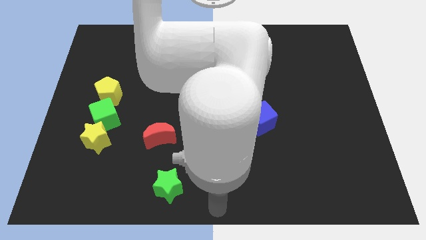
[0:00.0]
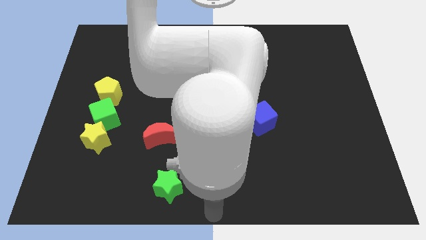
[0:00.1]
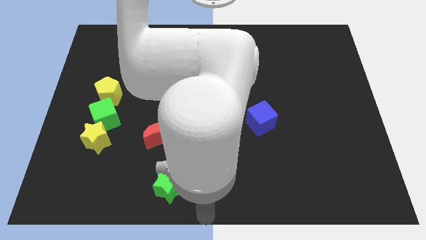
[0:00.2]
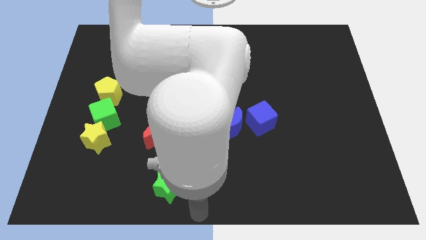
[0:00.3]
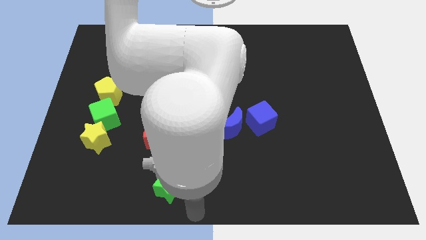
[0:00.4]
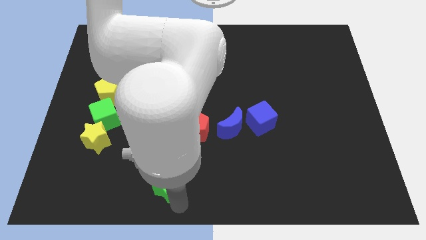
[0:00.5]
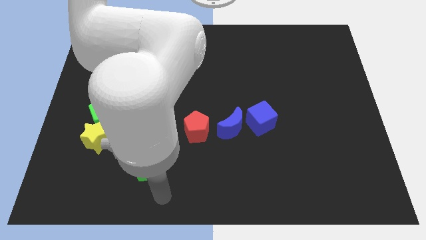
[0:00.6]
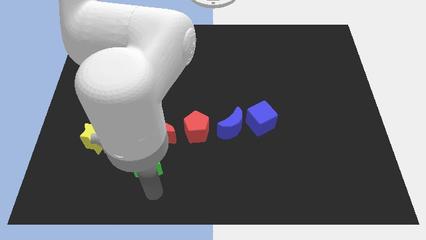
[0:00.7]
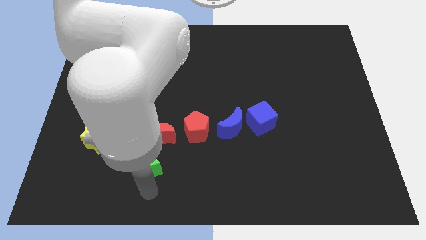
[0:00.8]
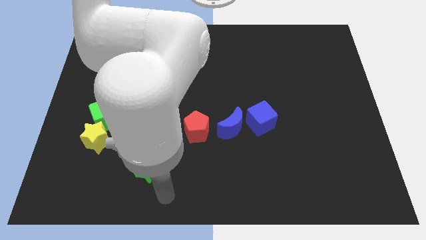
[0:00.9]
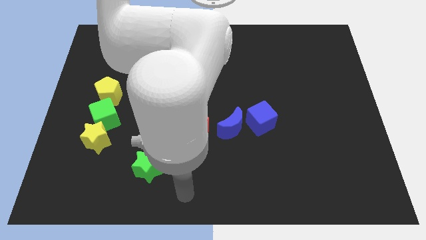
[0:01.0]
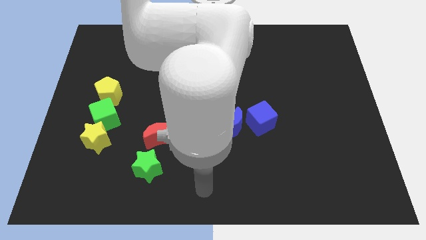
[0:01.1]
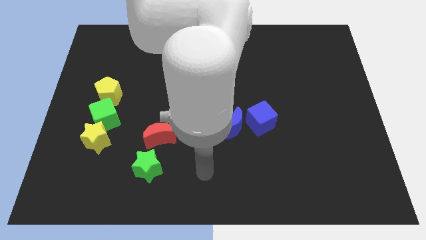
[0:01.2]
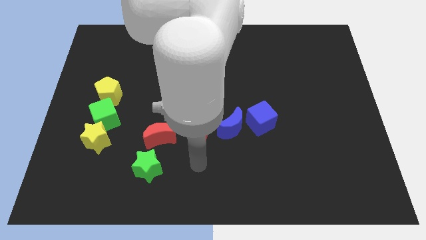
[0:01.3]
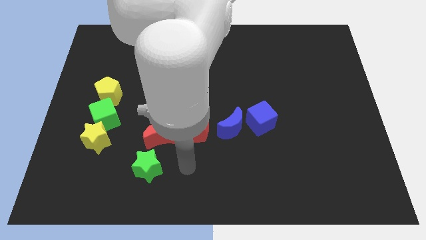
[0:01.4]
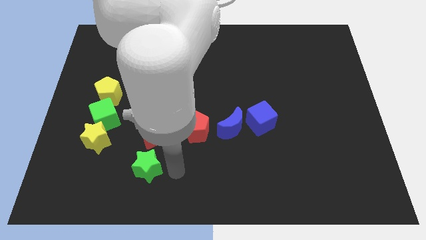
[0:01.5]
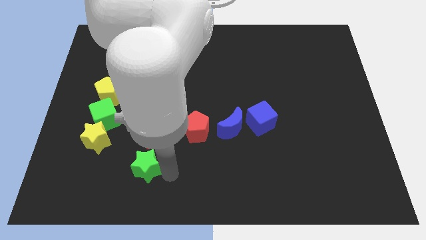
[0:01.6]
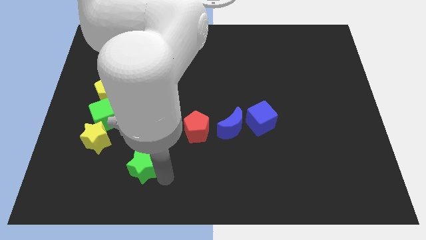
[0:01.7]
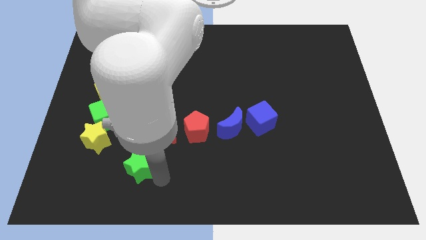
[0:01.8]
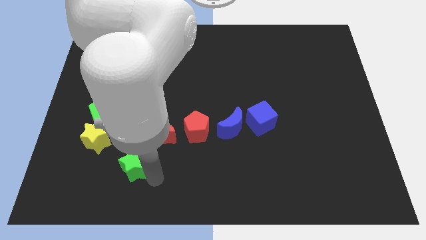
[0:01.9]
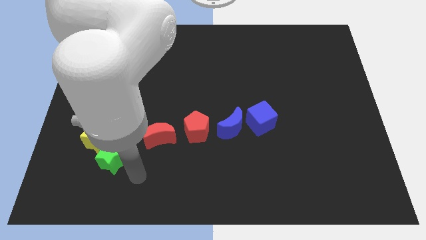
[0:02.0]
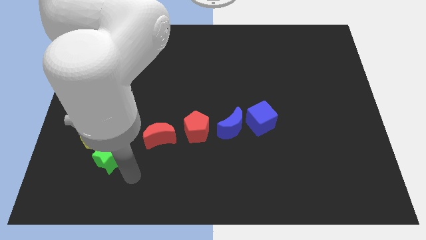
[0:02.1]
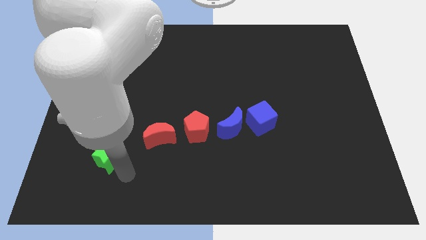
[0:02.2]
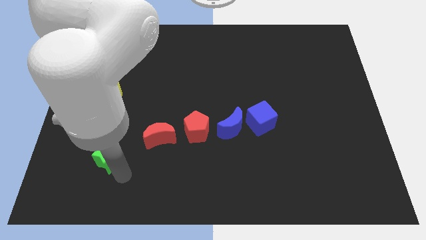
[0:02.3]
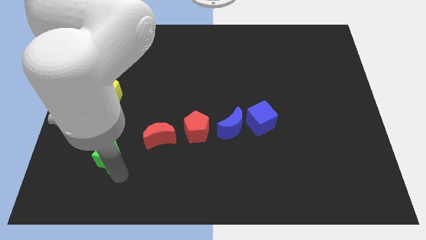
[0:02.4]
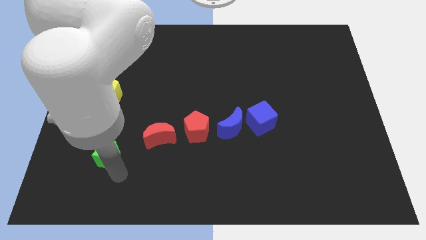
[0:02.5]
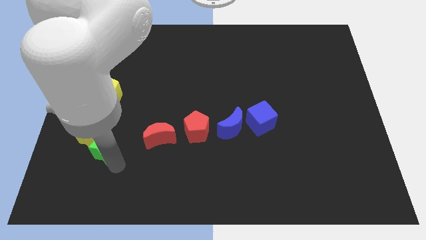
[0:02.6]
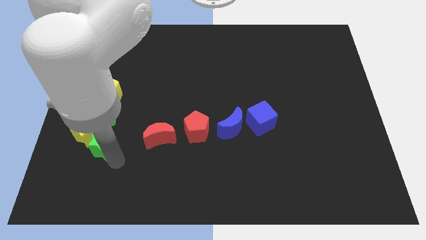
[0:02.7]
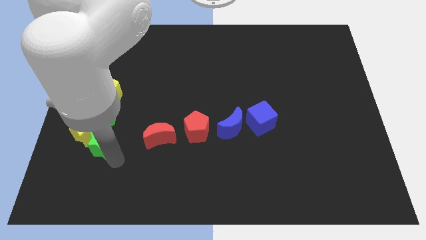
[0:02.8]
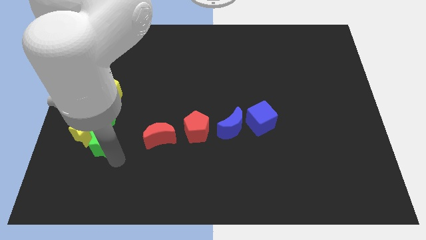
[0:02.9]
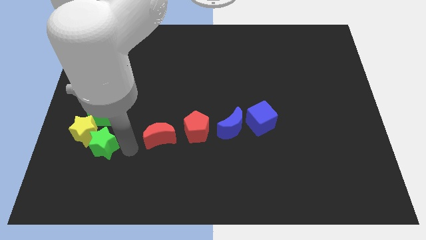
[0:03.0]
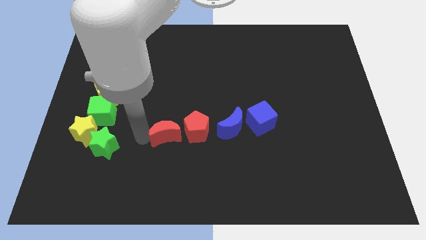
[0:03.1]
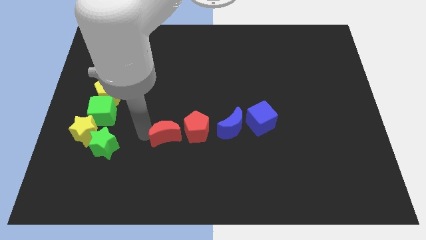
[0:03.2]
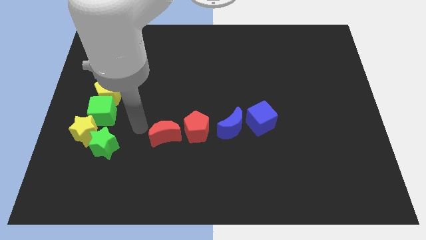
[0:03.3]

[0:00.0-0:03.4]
push the green star into the yellow star

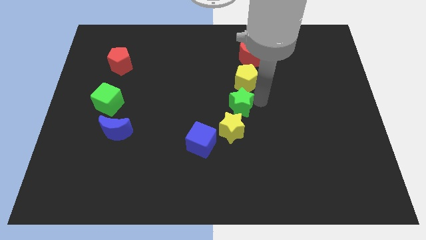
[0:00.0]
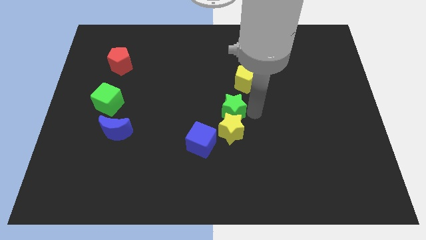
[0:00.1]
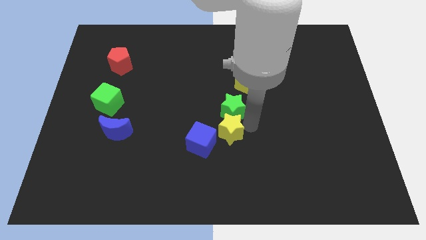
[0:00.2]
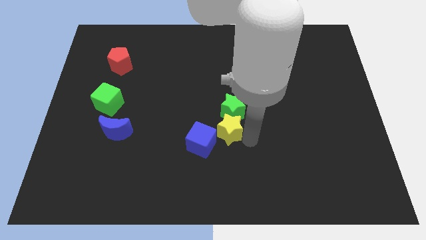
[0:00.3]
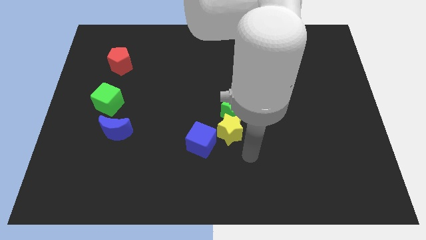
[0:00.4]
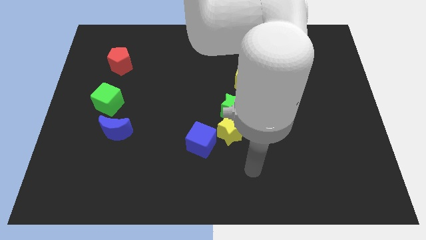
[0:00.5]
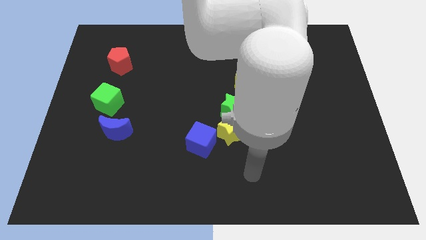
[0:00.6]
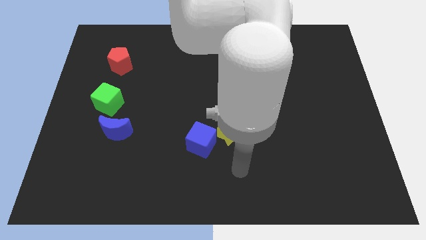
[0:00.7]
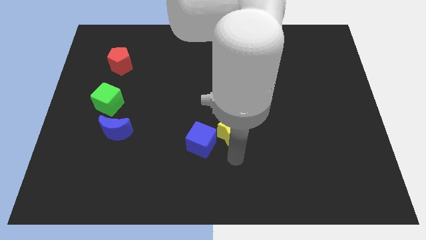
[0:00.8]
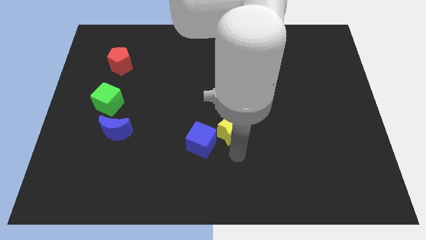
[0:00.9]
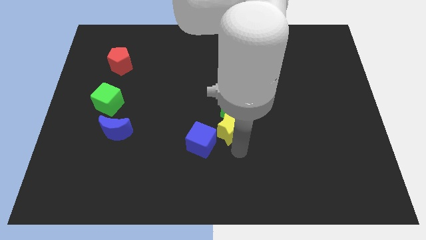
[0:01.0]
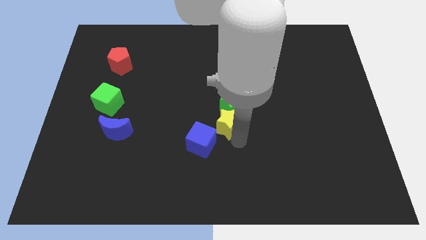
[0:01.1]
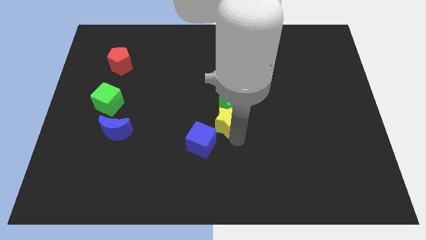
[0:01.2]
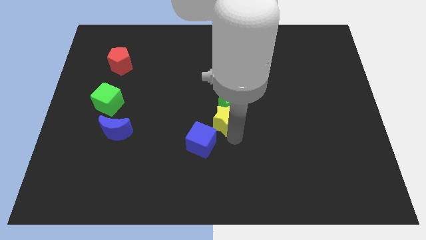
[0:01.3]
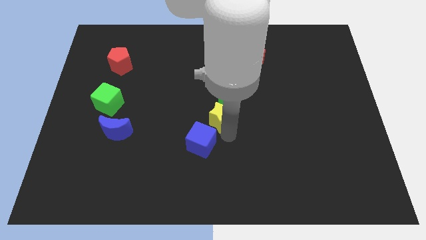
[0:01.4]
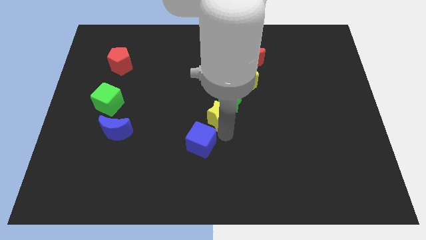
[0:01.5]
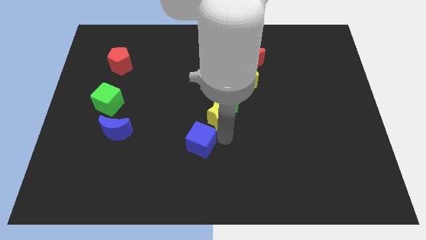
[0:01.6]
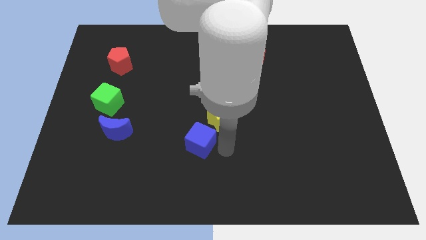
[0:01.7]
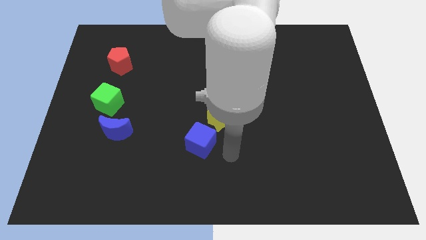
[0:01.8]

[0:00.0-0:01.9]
place the yellow star in between the blue cube and green star

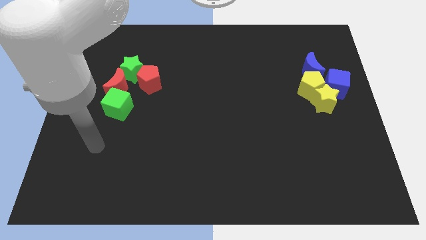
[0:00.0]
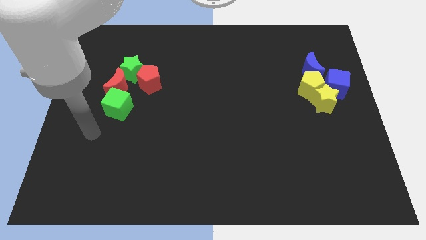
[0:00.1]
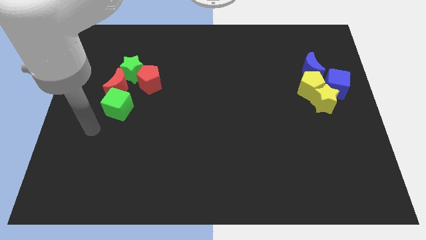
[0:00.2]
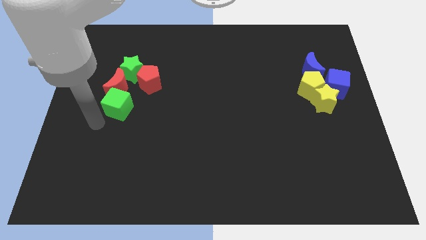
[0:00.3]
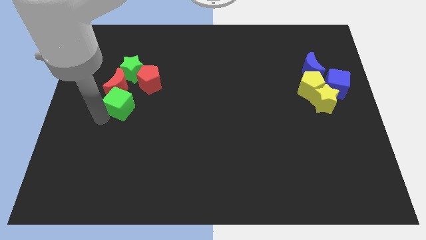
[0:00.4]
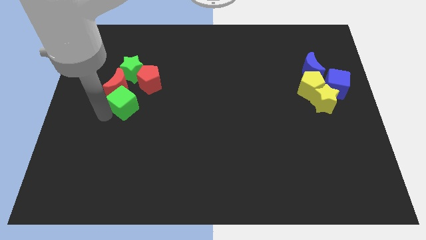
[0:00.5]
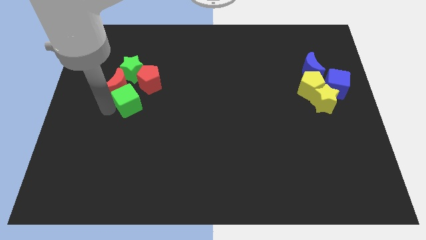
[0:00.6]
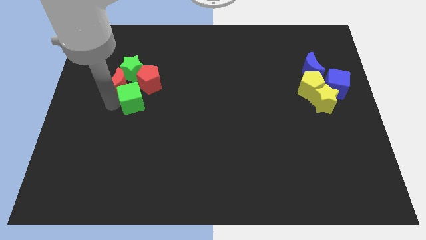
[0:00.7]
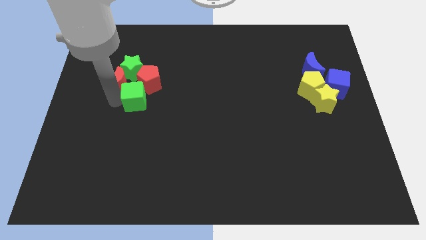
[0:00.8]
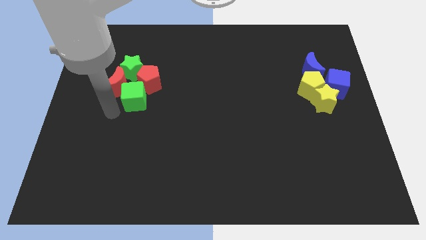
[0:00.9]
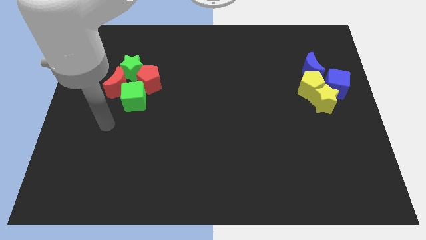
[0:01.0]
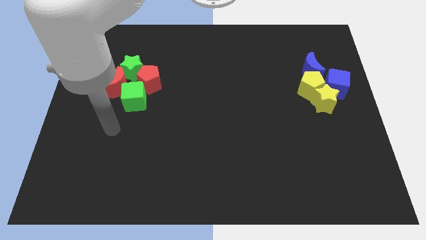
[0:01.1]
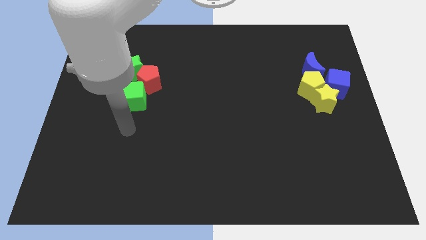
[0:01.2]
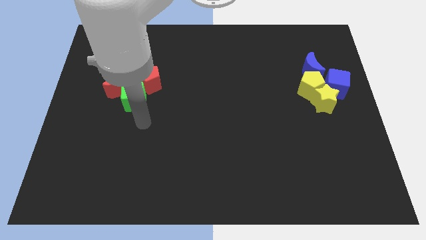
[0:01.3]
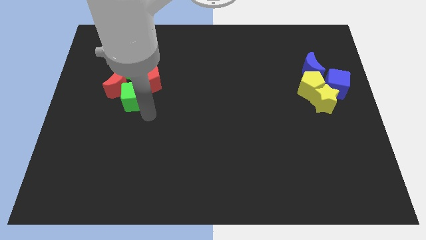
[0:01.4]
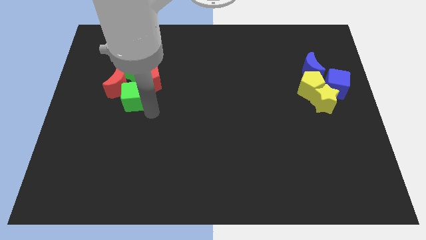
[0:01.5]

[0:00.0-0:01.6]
place the green cube into the red crescent and red pentagon

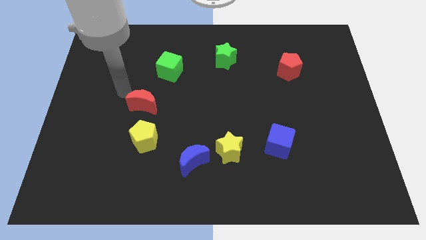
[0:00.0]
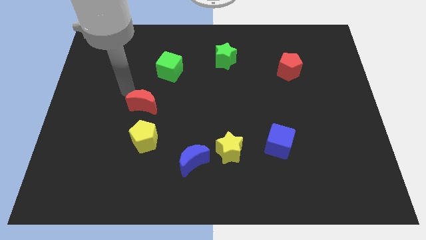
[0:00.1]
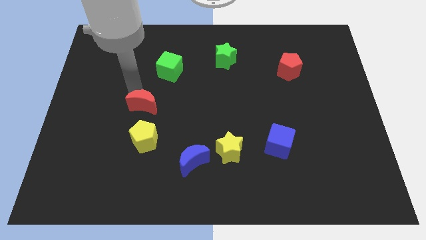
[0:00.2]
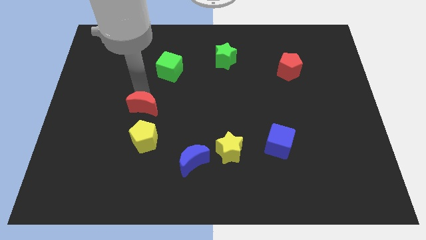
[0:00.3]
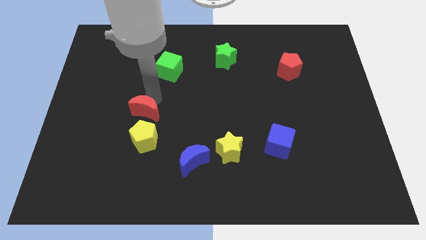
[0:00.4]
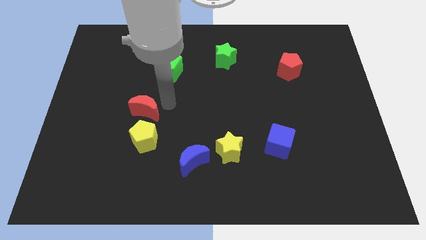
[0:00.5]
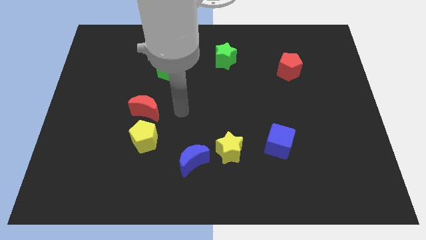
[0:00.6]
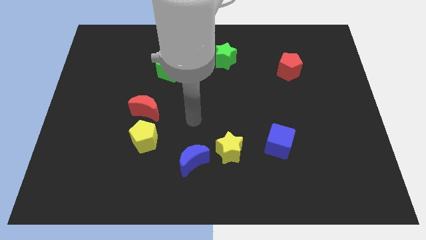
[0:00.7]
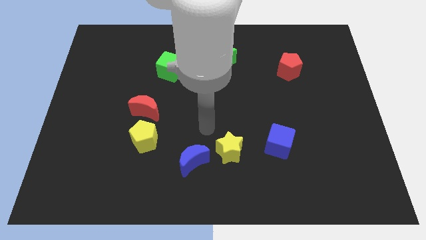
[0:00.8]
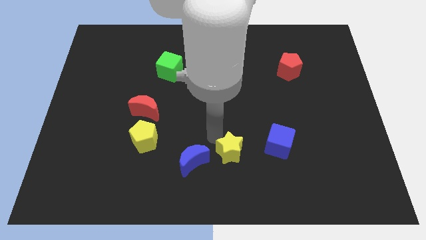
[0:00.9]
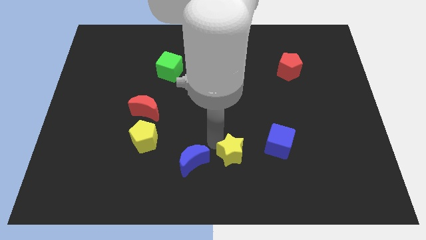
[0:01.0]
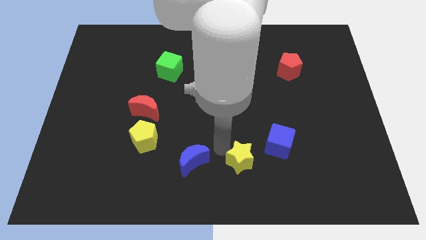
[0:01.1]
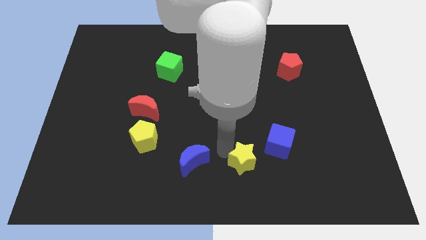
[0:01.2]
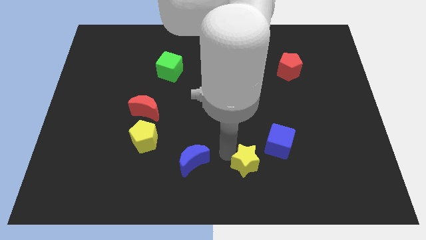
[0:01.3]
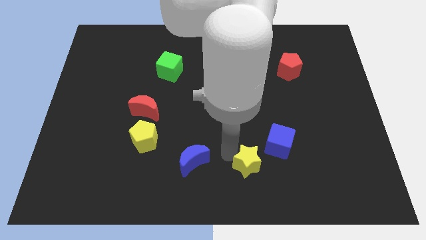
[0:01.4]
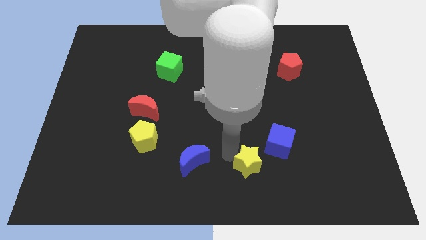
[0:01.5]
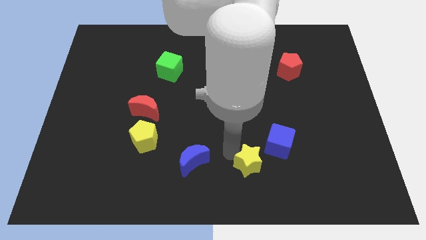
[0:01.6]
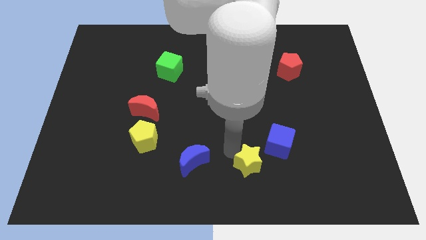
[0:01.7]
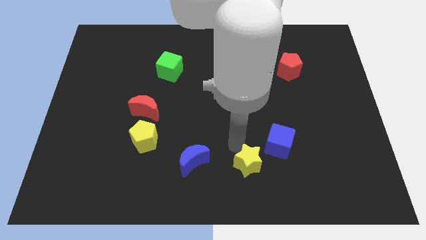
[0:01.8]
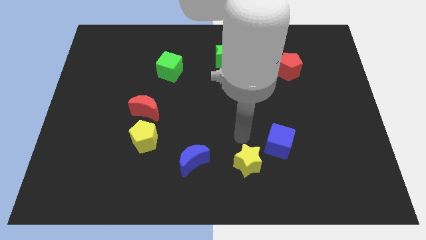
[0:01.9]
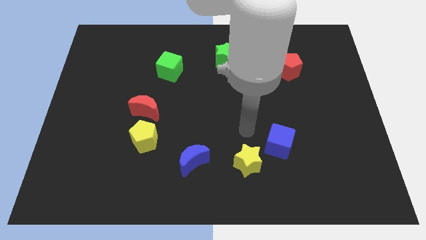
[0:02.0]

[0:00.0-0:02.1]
push the yellow star parallel to the right of the blue crescent
